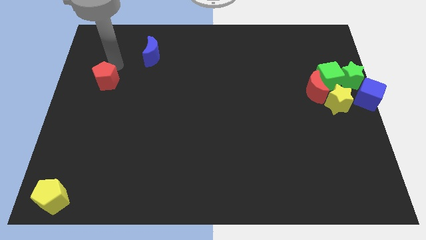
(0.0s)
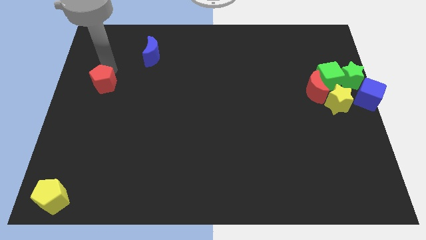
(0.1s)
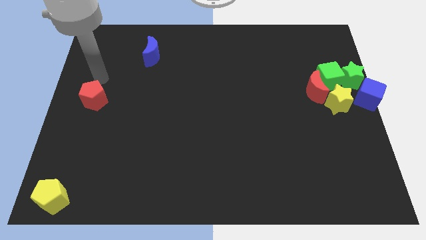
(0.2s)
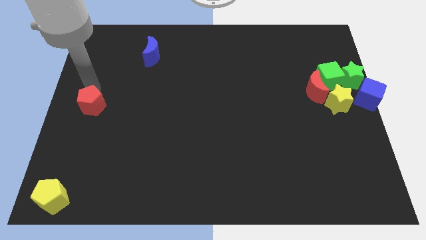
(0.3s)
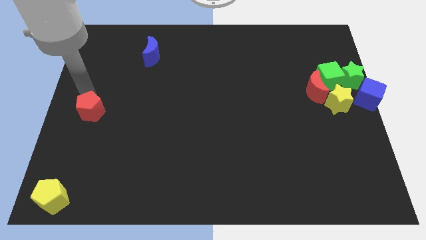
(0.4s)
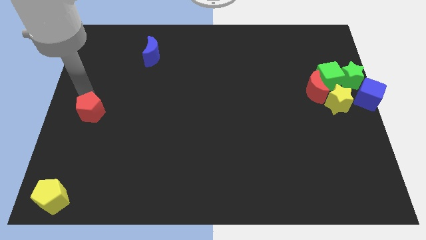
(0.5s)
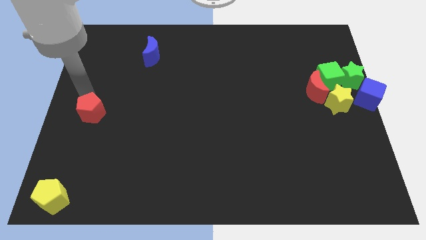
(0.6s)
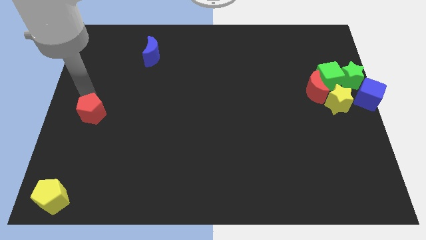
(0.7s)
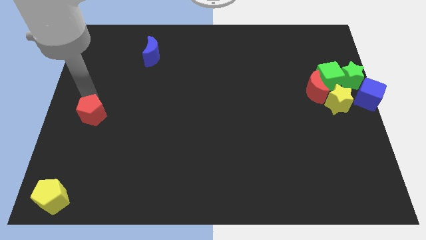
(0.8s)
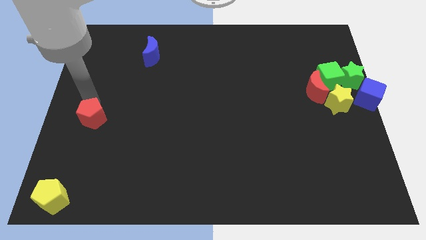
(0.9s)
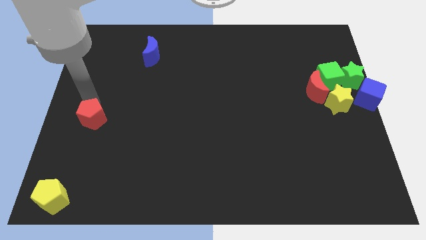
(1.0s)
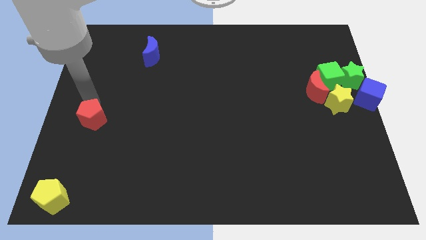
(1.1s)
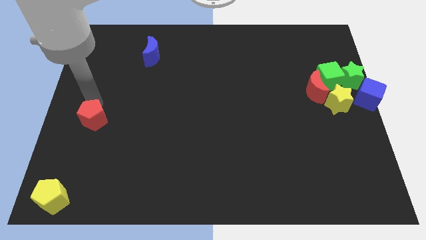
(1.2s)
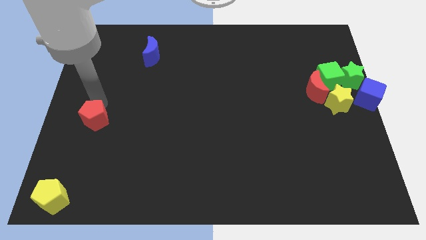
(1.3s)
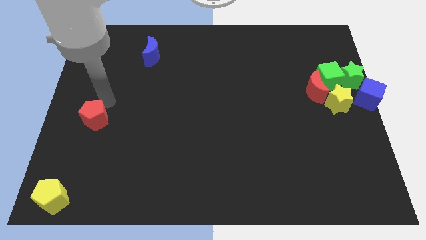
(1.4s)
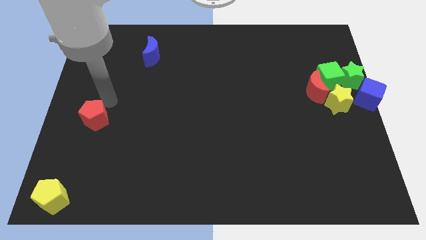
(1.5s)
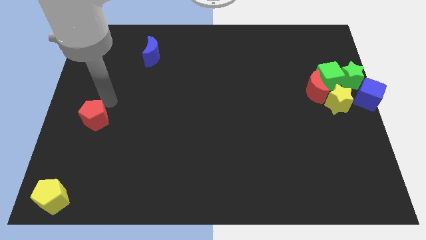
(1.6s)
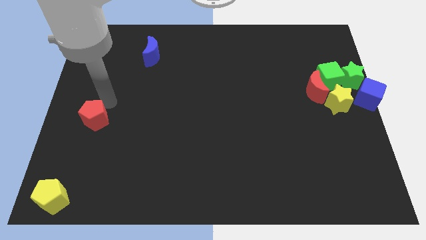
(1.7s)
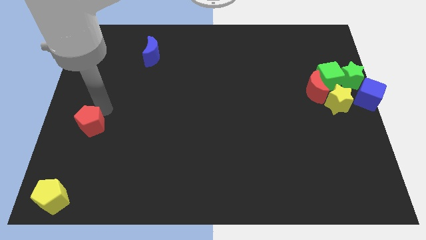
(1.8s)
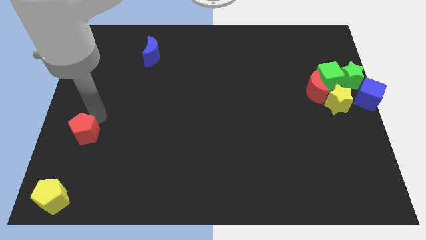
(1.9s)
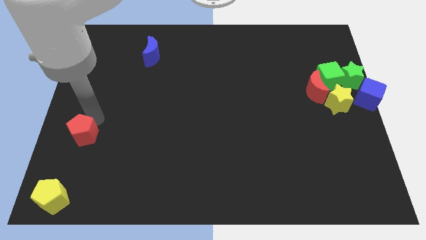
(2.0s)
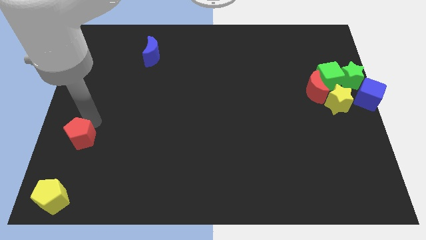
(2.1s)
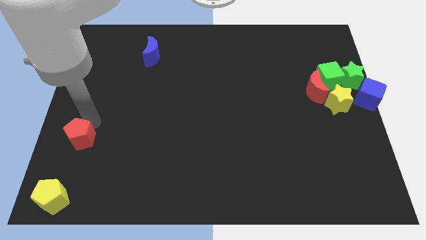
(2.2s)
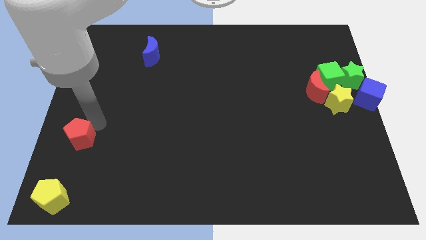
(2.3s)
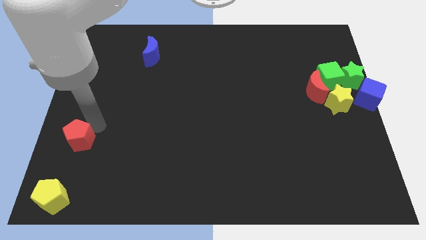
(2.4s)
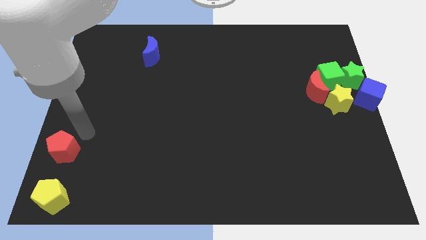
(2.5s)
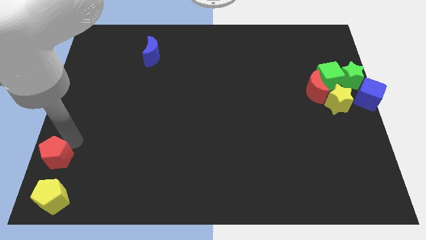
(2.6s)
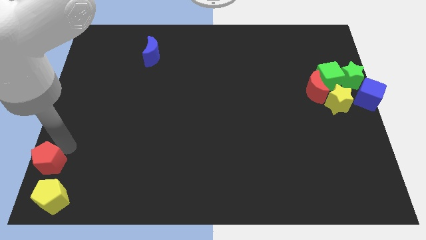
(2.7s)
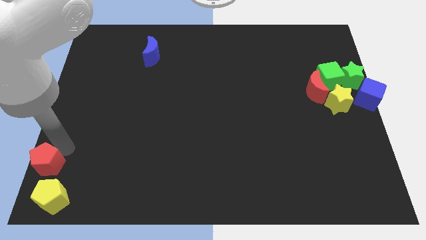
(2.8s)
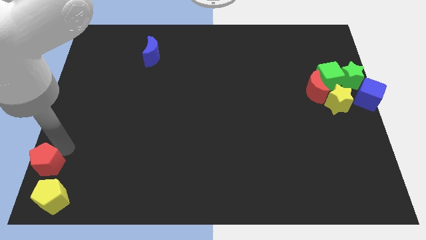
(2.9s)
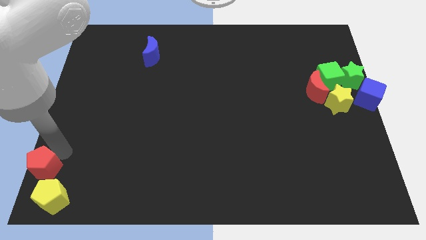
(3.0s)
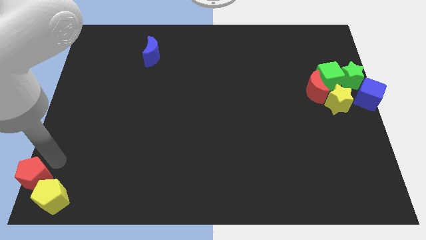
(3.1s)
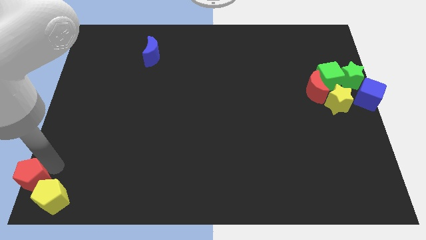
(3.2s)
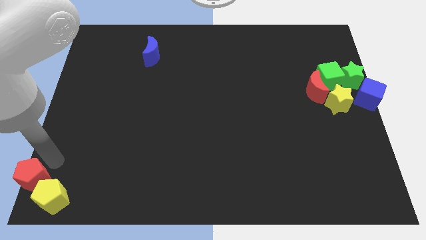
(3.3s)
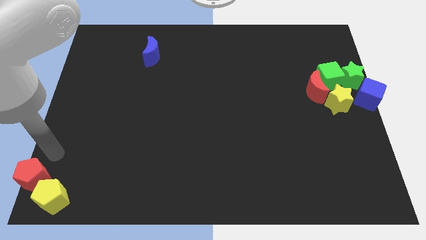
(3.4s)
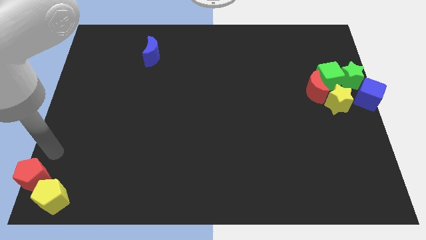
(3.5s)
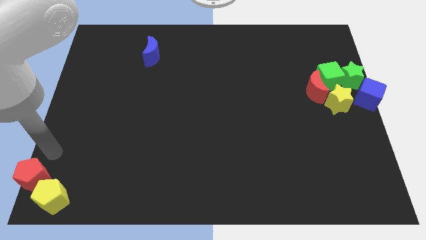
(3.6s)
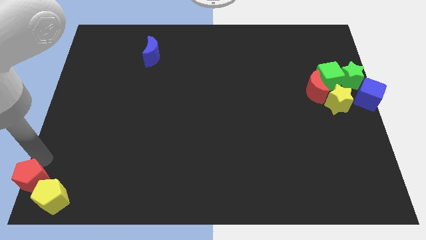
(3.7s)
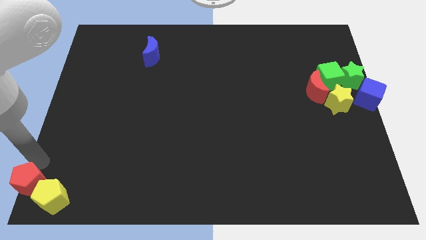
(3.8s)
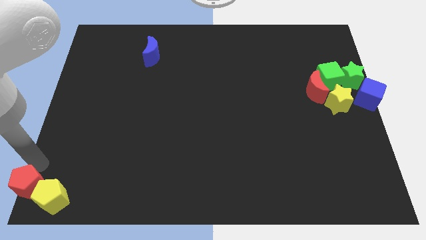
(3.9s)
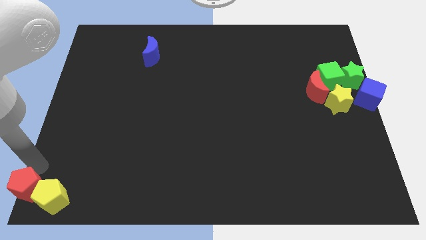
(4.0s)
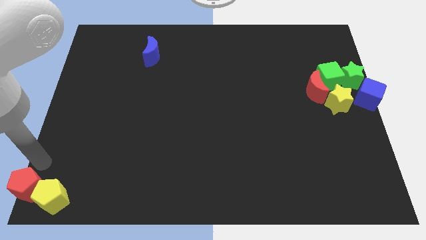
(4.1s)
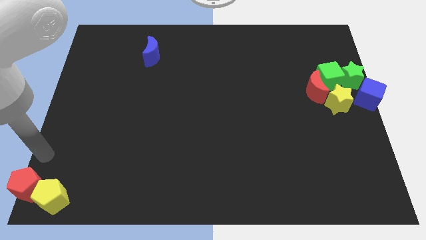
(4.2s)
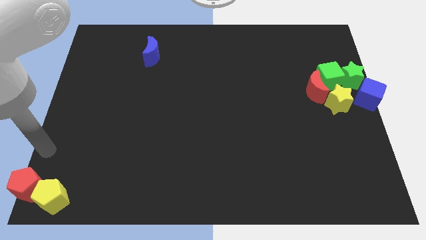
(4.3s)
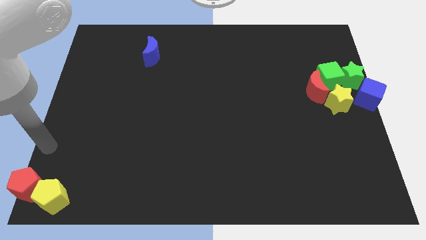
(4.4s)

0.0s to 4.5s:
place the red pentagon to the left of yellow pentagon

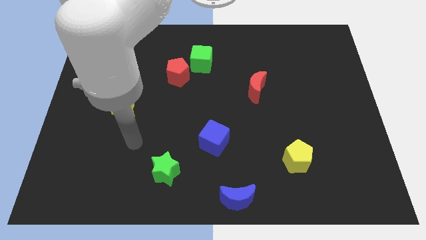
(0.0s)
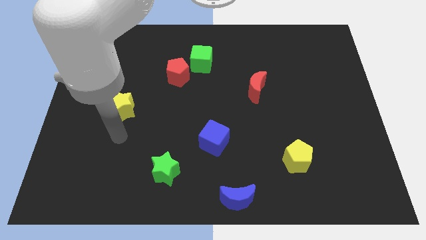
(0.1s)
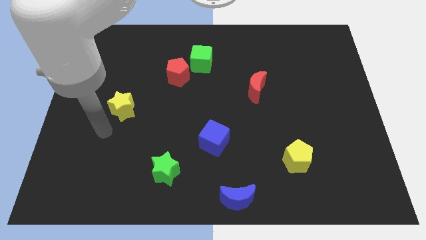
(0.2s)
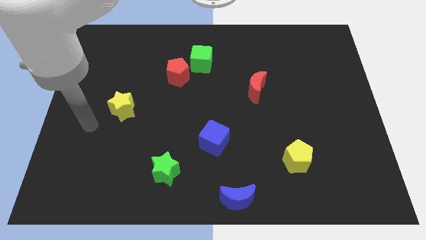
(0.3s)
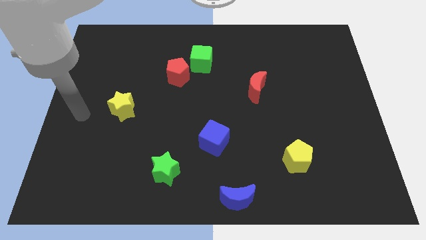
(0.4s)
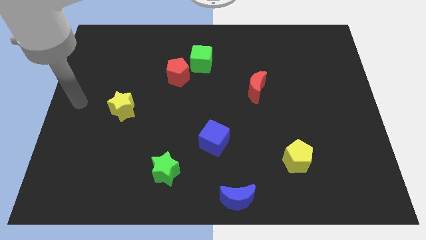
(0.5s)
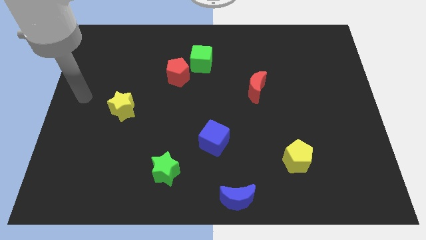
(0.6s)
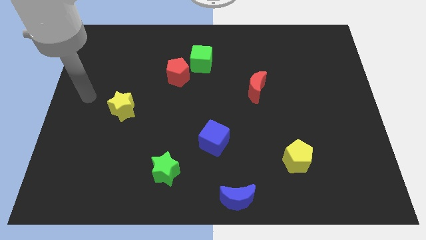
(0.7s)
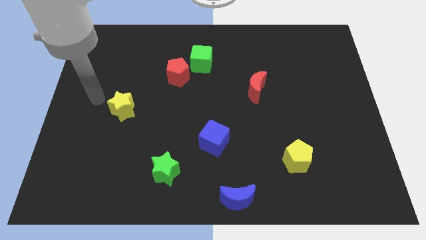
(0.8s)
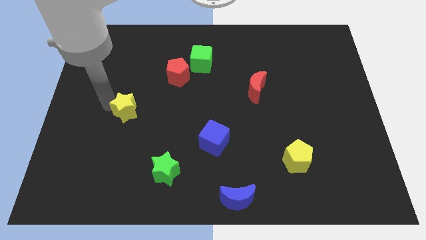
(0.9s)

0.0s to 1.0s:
point your arm above yellow star

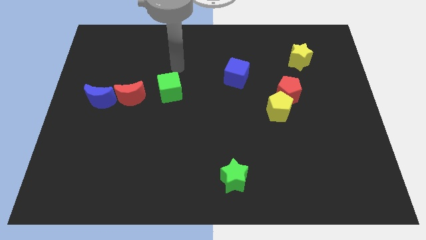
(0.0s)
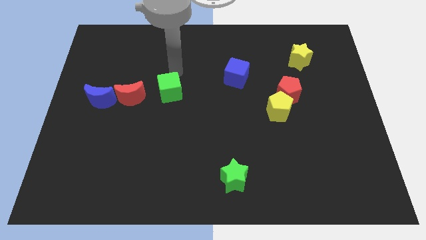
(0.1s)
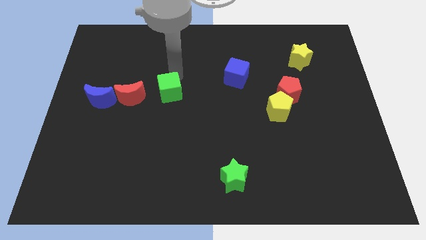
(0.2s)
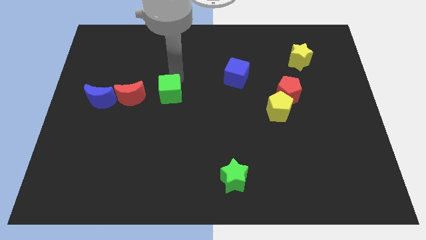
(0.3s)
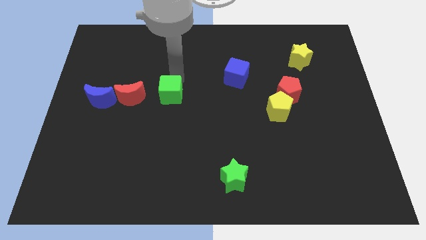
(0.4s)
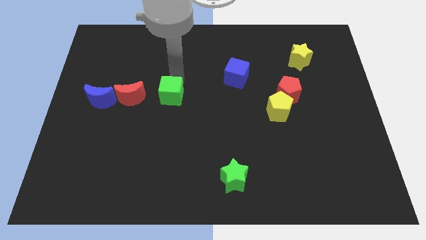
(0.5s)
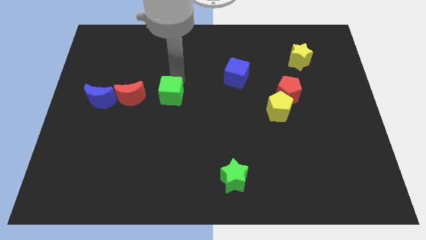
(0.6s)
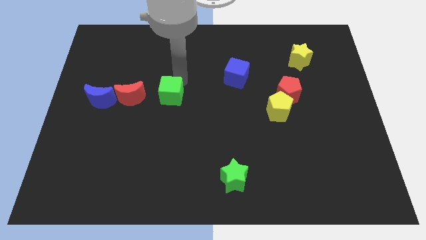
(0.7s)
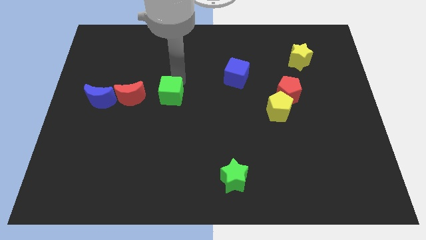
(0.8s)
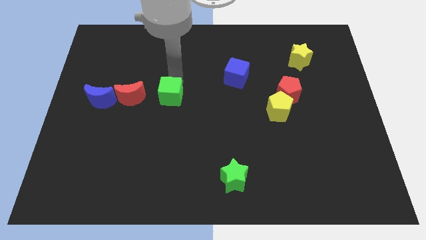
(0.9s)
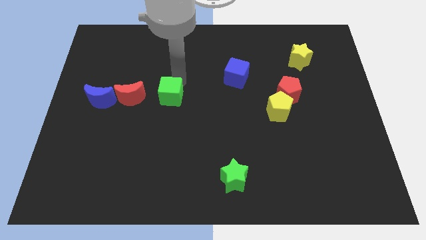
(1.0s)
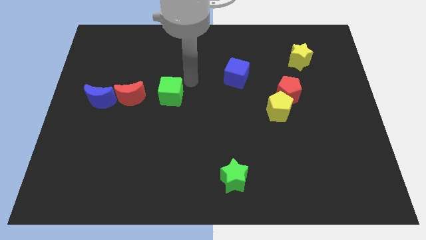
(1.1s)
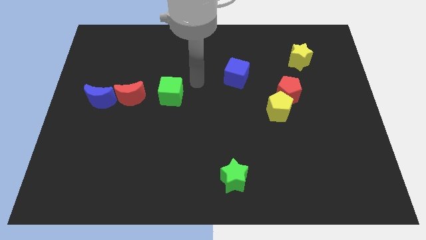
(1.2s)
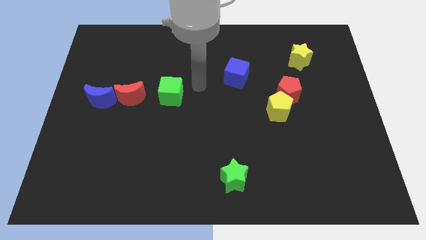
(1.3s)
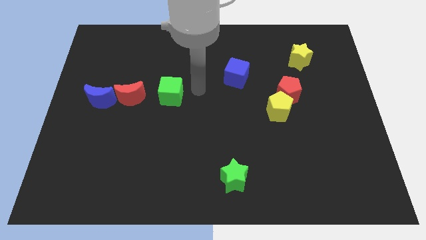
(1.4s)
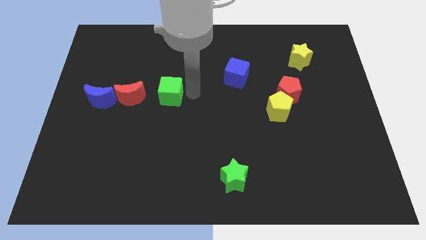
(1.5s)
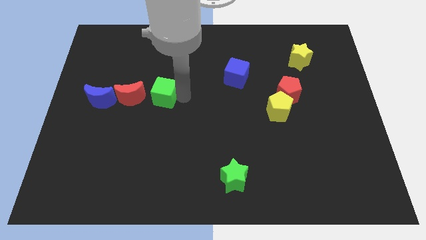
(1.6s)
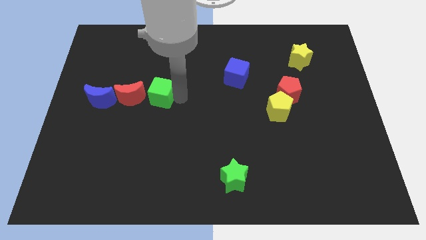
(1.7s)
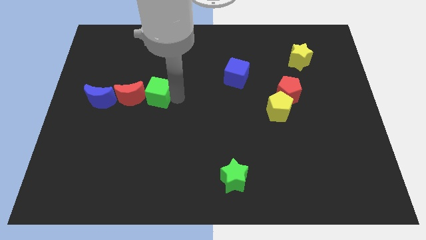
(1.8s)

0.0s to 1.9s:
move the green cube close to the red moon

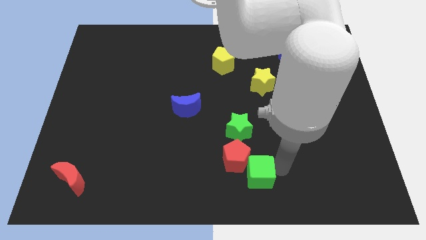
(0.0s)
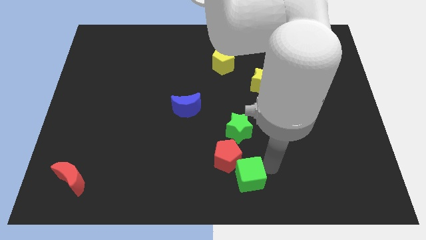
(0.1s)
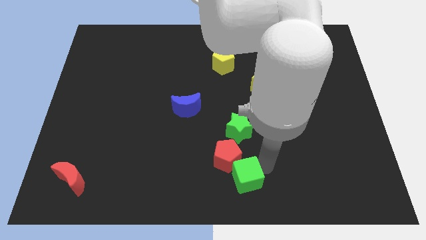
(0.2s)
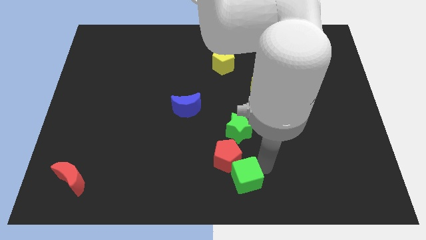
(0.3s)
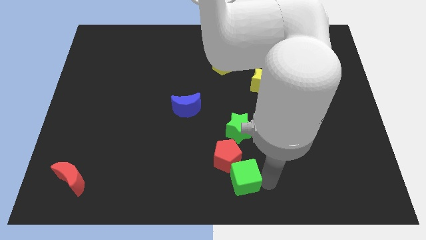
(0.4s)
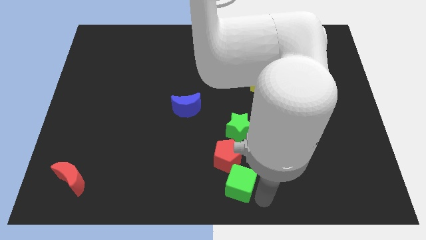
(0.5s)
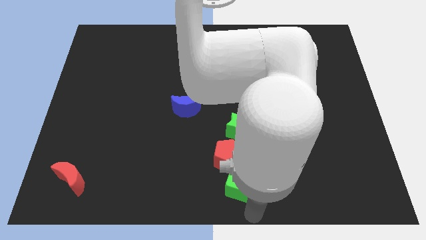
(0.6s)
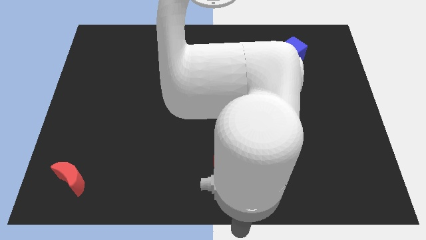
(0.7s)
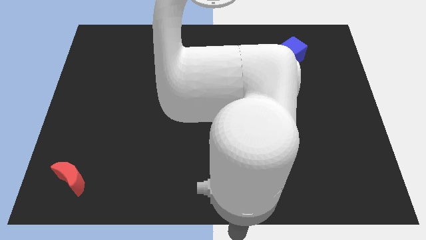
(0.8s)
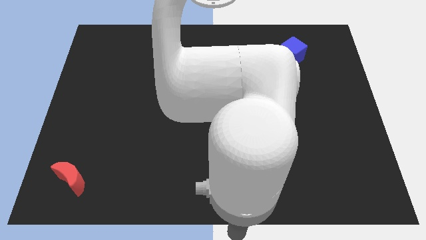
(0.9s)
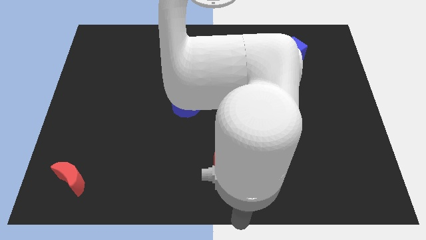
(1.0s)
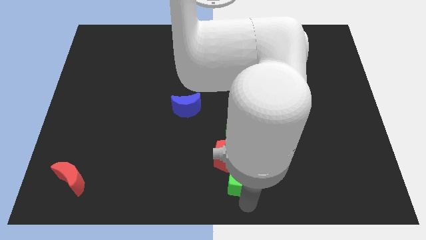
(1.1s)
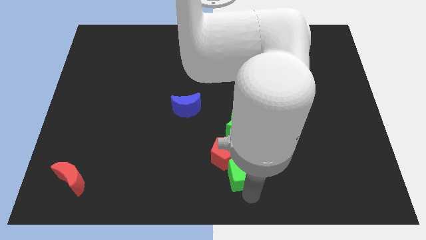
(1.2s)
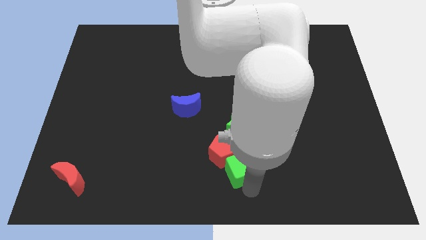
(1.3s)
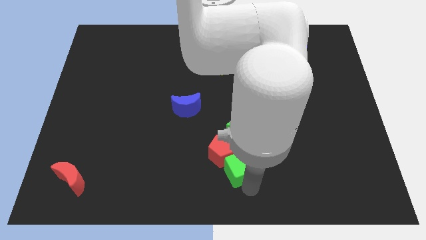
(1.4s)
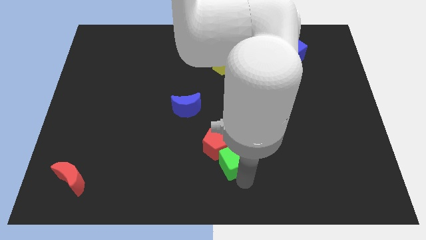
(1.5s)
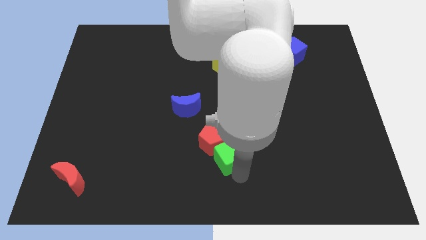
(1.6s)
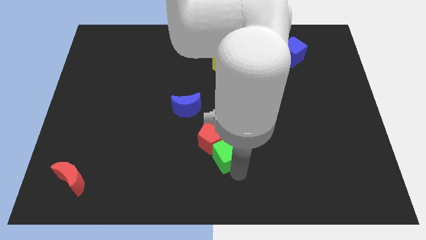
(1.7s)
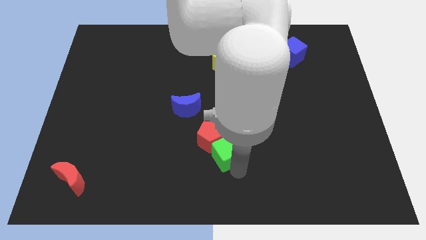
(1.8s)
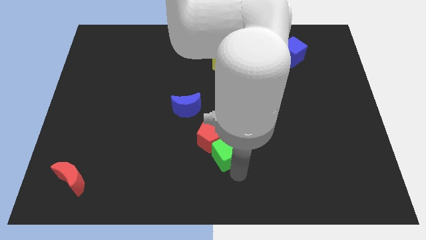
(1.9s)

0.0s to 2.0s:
move the green cube into the red penatgon and green star
